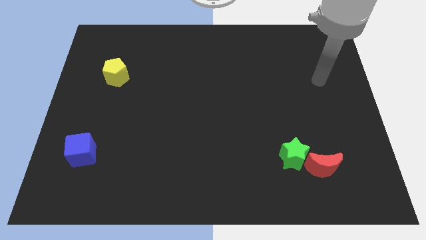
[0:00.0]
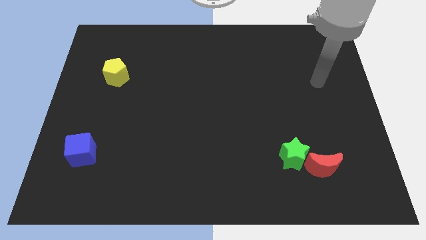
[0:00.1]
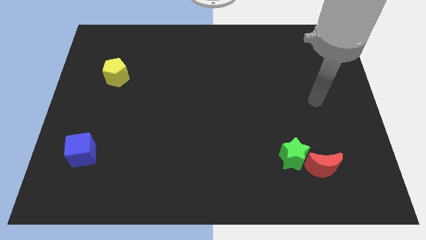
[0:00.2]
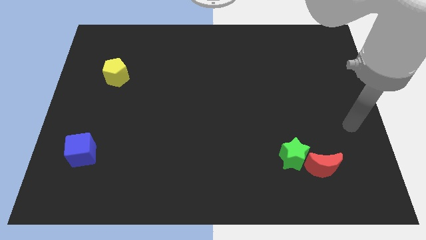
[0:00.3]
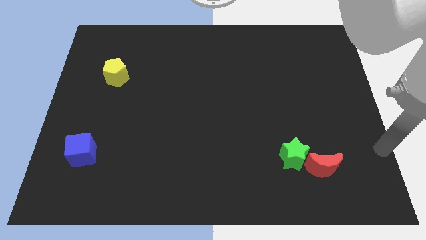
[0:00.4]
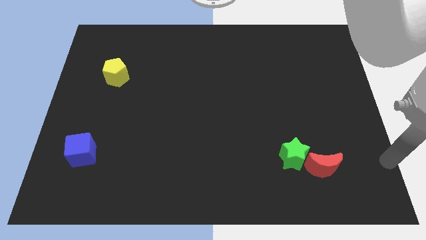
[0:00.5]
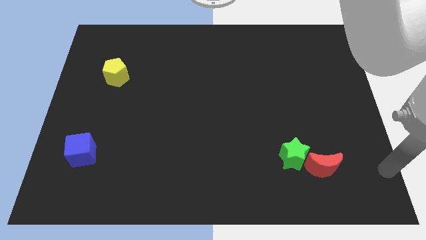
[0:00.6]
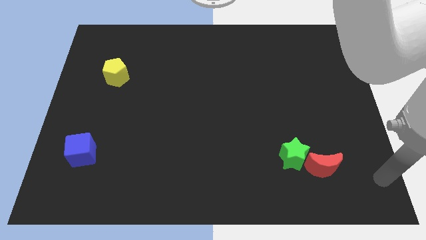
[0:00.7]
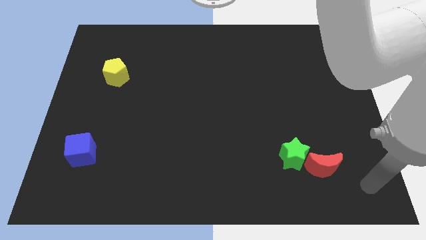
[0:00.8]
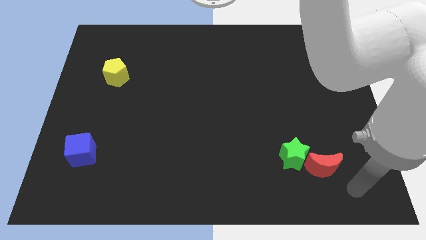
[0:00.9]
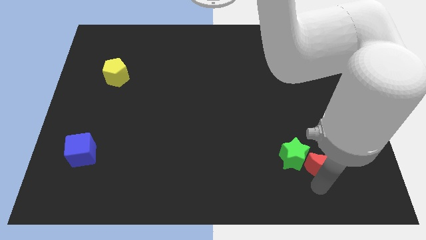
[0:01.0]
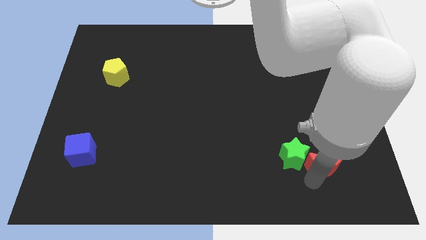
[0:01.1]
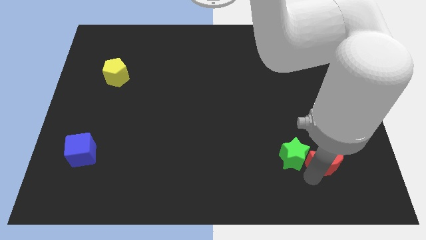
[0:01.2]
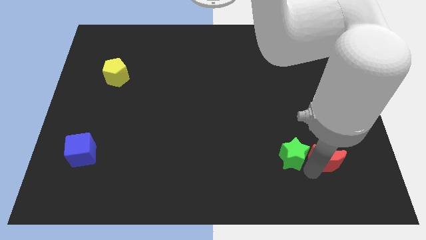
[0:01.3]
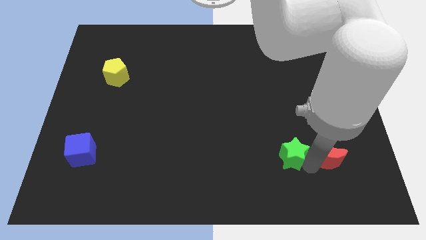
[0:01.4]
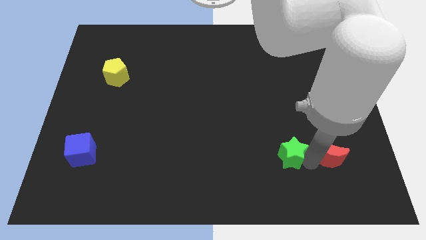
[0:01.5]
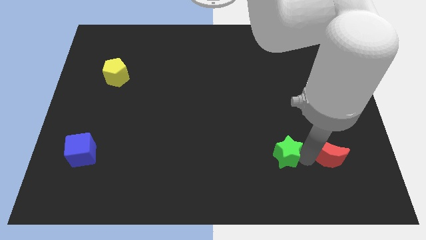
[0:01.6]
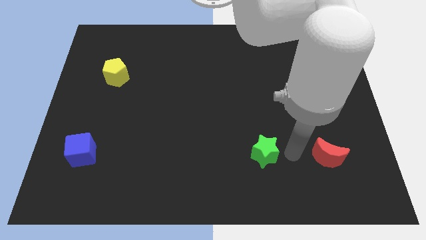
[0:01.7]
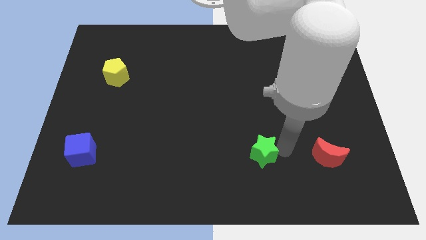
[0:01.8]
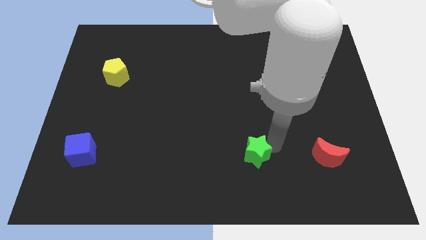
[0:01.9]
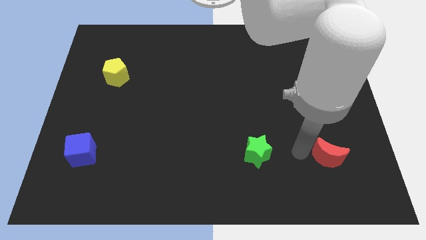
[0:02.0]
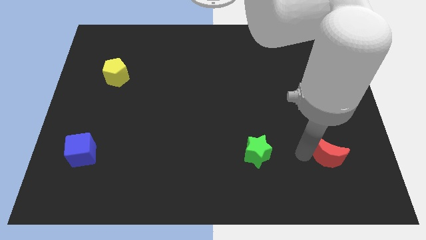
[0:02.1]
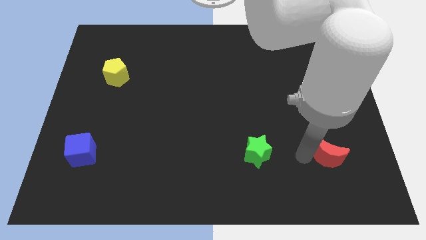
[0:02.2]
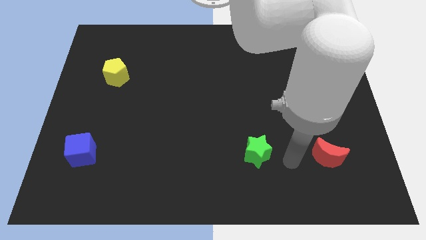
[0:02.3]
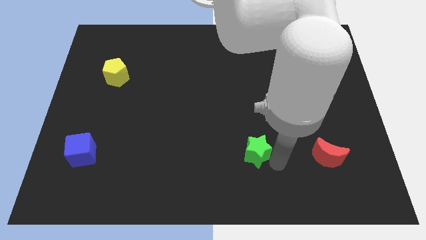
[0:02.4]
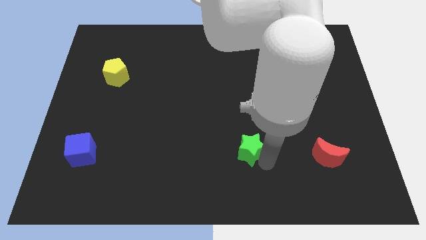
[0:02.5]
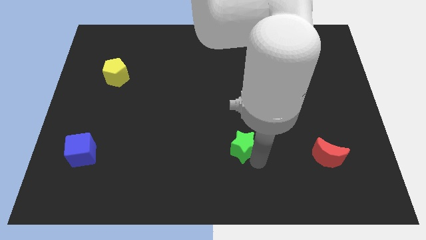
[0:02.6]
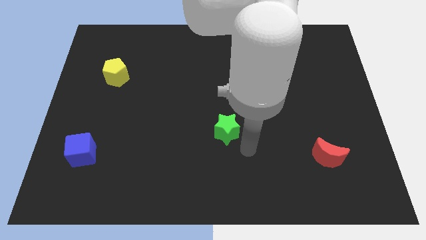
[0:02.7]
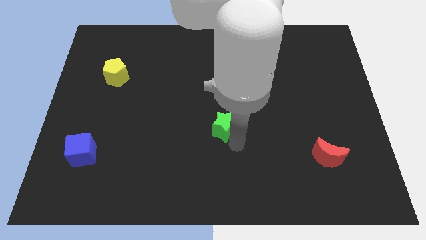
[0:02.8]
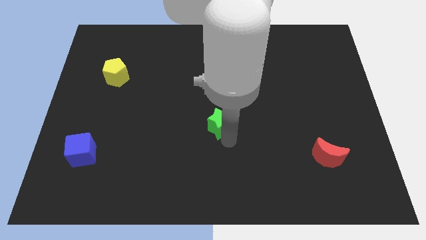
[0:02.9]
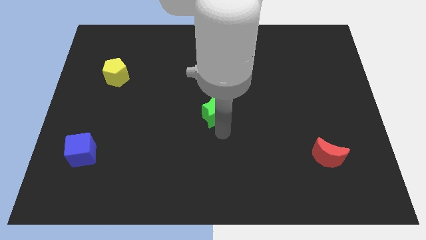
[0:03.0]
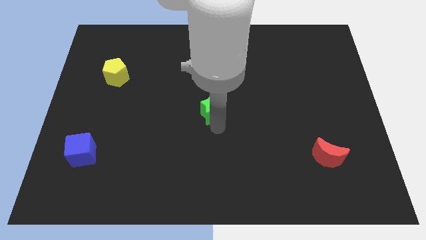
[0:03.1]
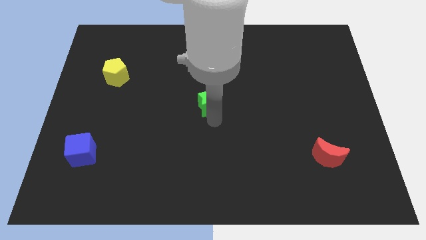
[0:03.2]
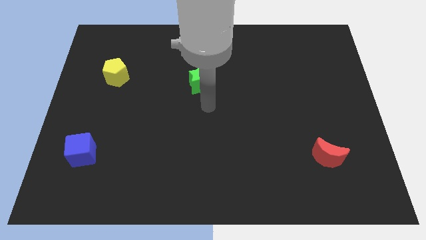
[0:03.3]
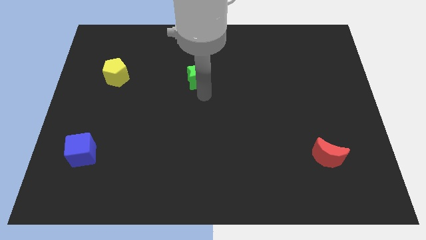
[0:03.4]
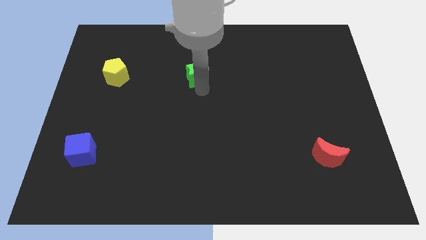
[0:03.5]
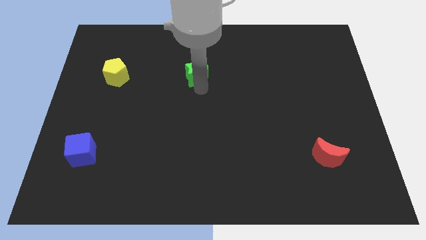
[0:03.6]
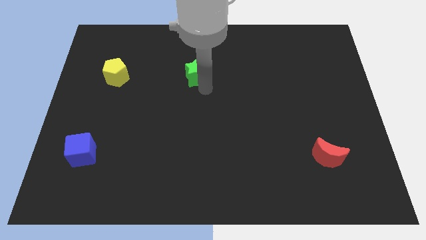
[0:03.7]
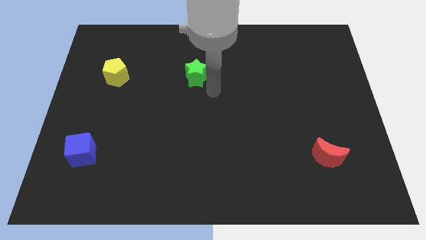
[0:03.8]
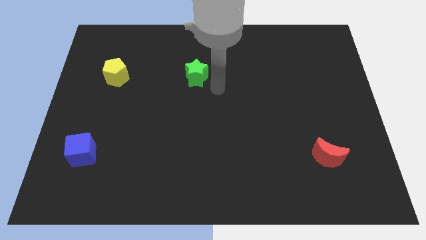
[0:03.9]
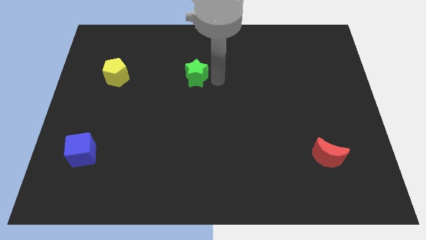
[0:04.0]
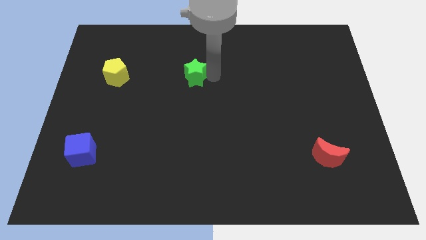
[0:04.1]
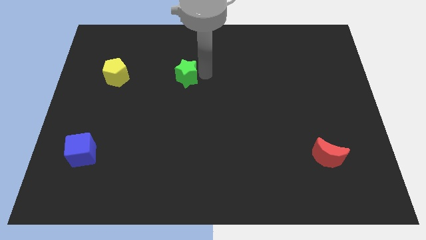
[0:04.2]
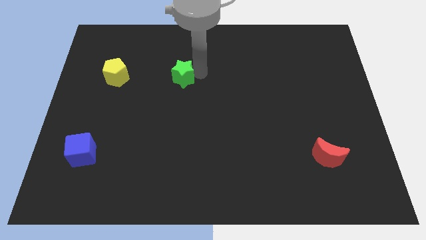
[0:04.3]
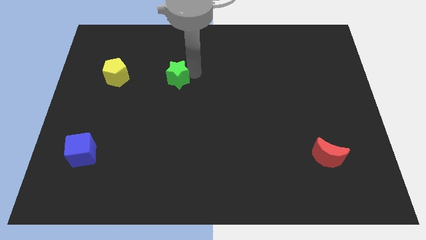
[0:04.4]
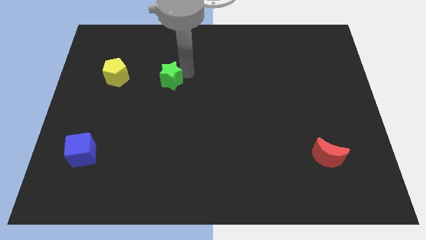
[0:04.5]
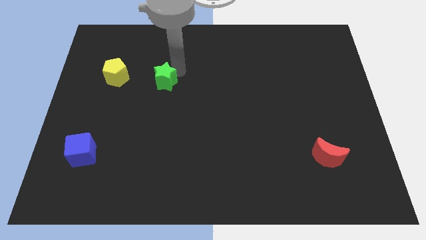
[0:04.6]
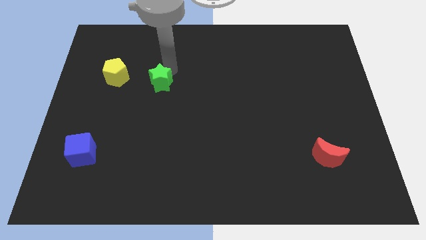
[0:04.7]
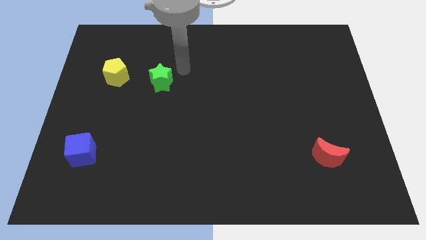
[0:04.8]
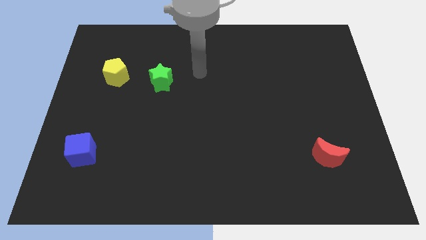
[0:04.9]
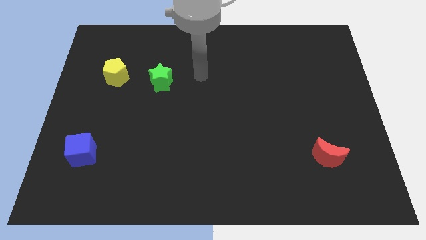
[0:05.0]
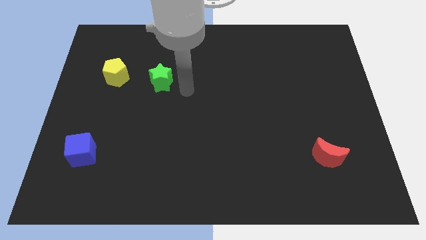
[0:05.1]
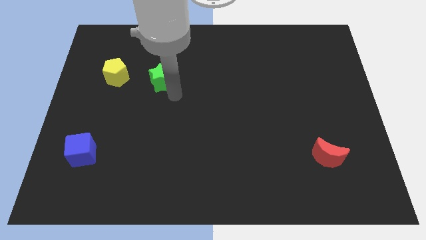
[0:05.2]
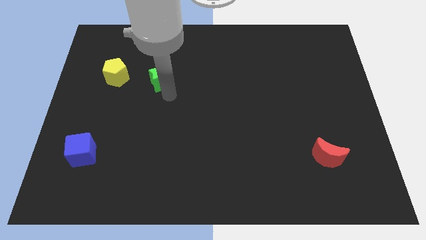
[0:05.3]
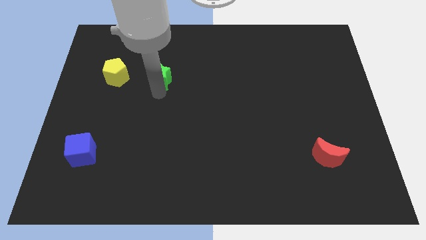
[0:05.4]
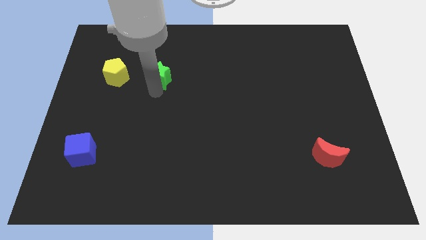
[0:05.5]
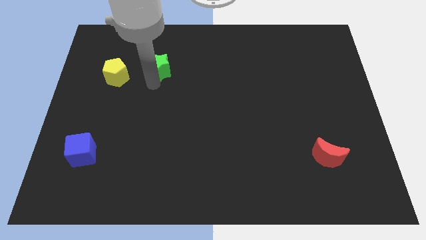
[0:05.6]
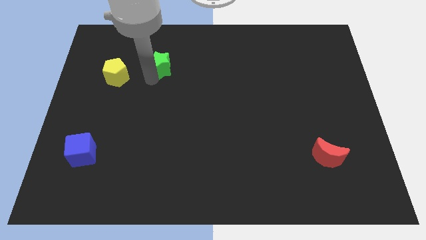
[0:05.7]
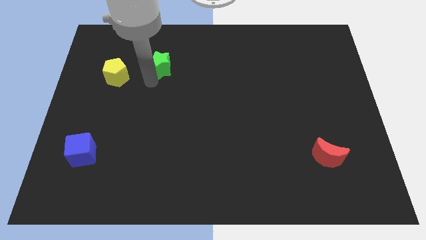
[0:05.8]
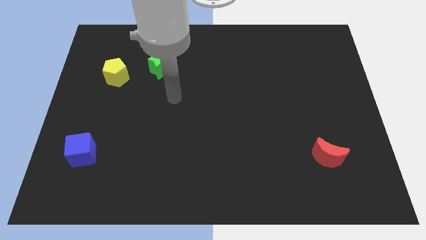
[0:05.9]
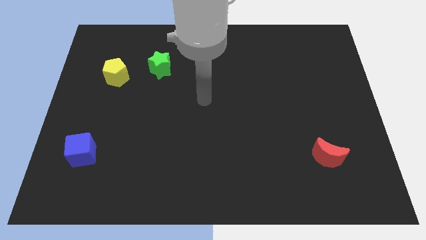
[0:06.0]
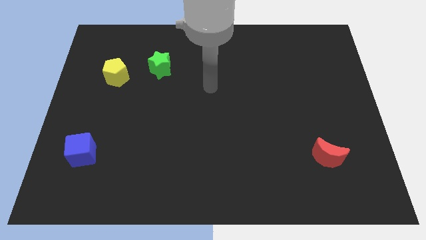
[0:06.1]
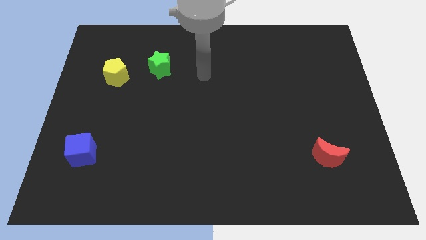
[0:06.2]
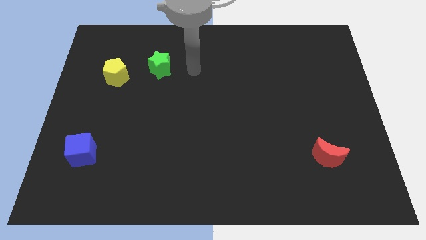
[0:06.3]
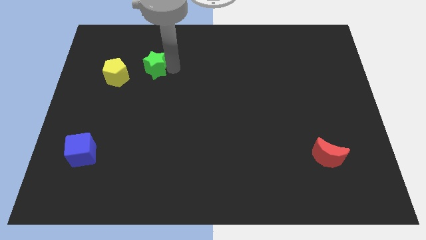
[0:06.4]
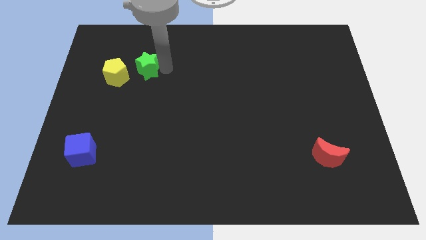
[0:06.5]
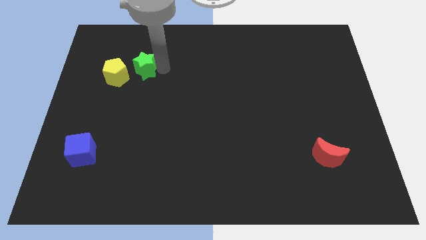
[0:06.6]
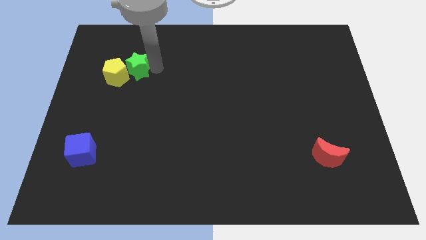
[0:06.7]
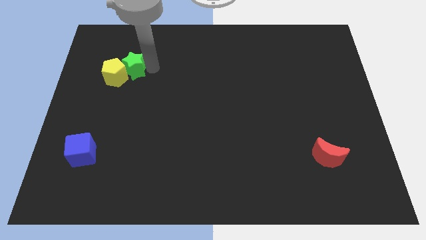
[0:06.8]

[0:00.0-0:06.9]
move the green star towards the yellow block

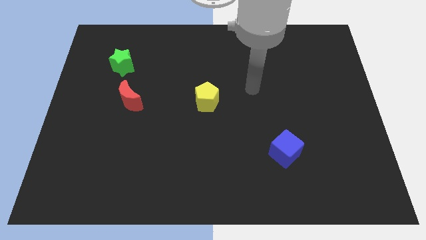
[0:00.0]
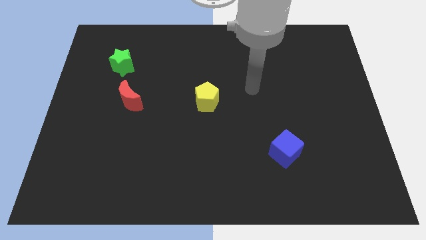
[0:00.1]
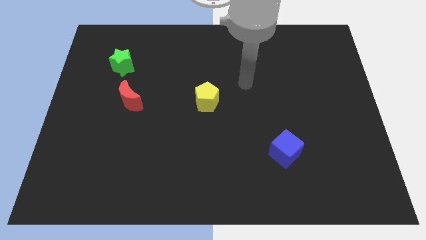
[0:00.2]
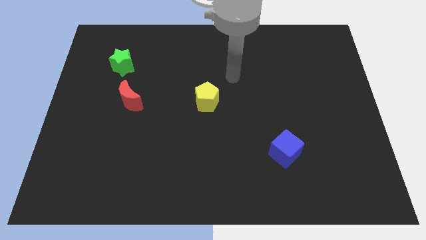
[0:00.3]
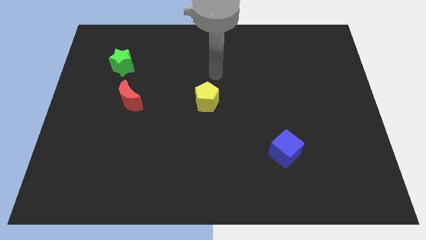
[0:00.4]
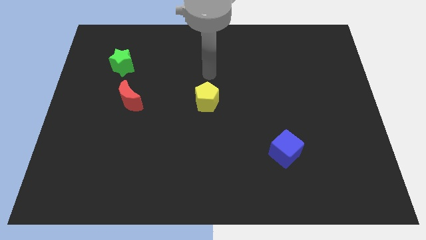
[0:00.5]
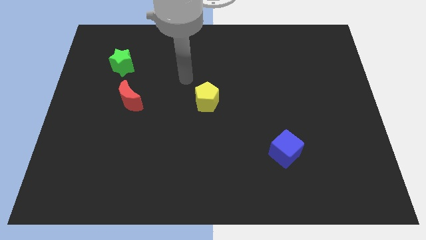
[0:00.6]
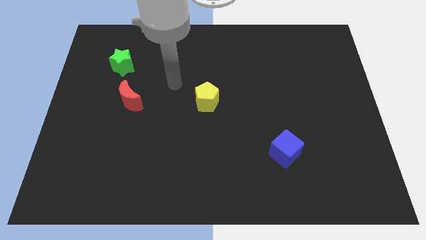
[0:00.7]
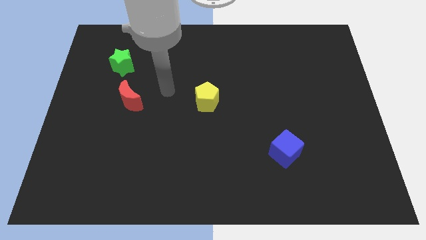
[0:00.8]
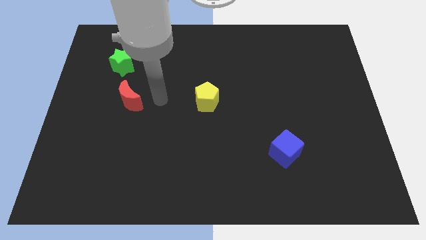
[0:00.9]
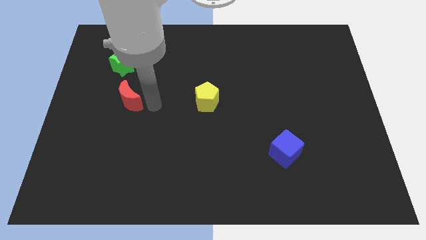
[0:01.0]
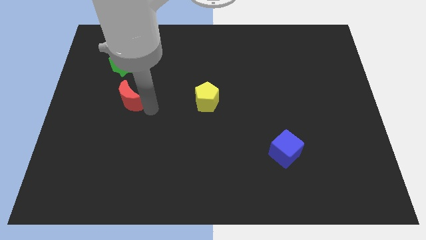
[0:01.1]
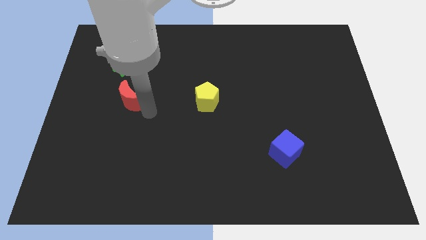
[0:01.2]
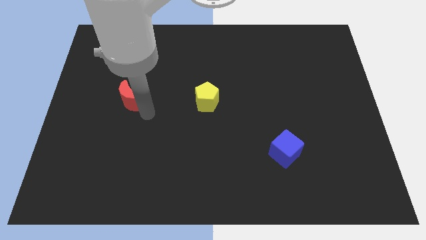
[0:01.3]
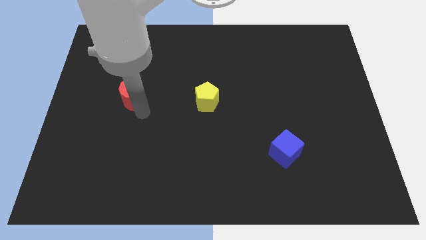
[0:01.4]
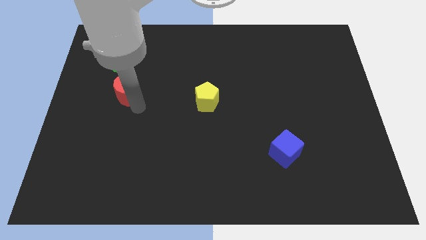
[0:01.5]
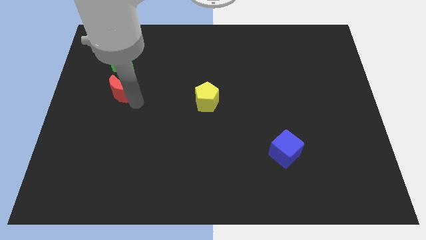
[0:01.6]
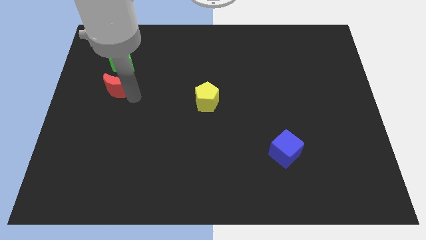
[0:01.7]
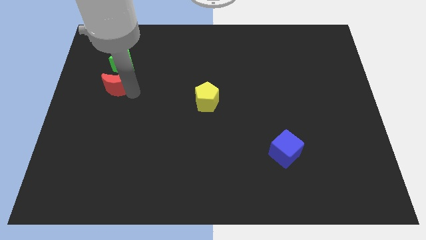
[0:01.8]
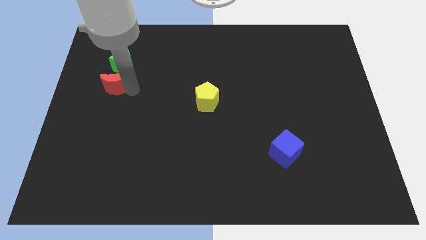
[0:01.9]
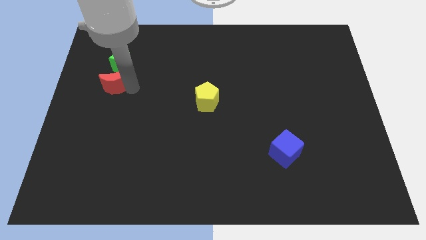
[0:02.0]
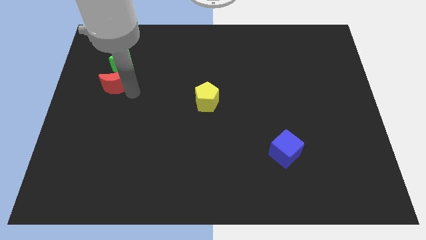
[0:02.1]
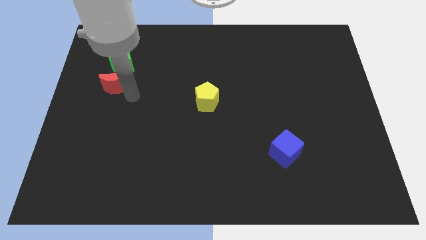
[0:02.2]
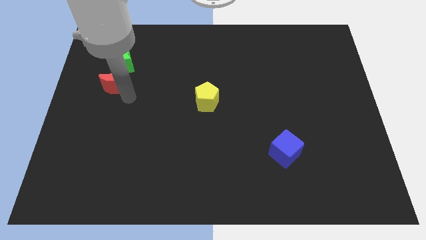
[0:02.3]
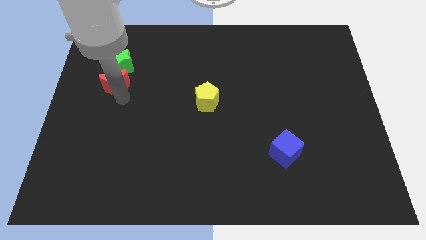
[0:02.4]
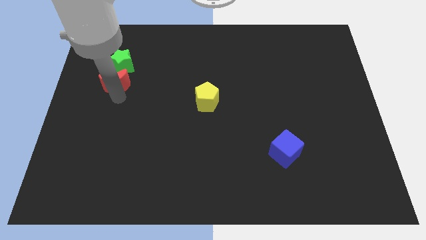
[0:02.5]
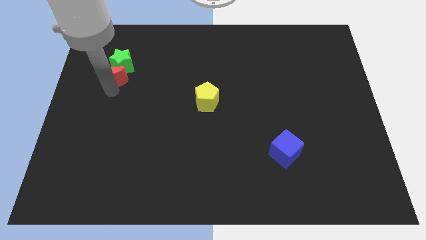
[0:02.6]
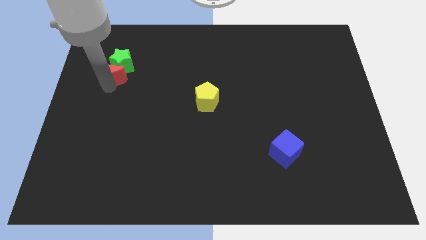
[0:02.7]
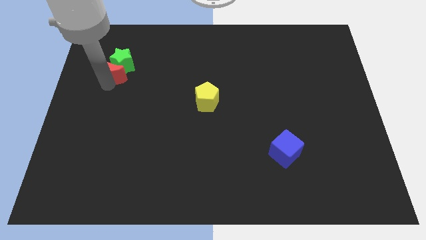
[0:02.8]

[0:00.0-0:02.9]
move the moon to the green block
